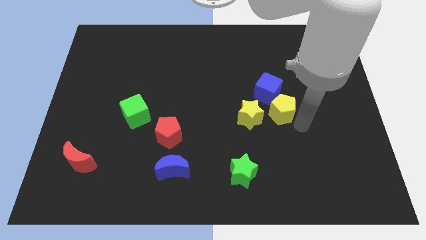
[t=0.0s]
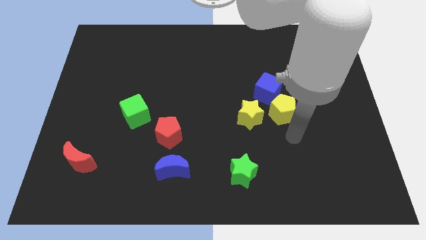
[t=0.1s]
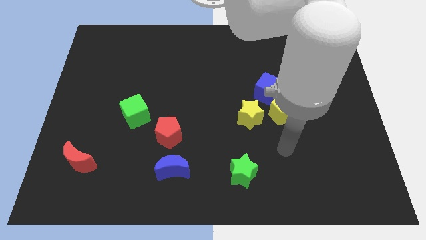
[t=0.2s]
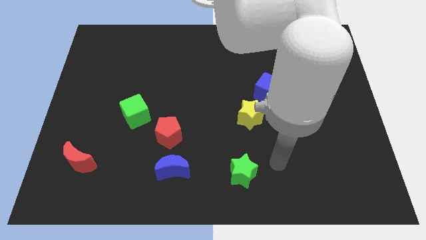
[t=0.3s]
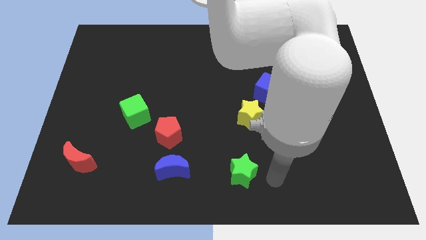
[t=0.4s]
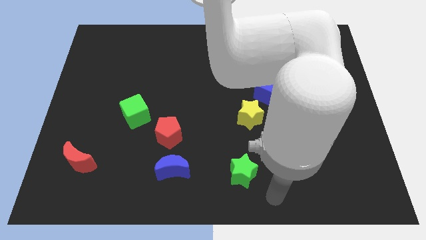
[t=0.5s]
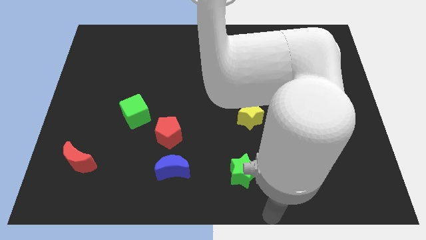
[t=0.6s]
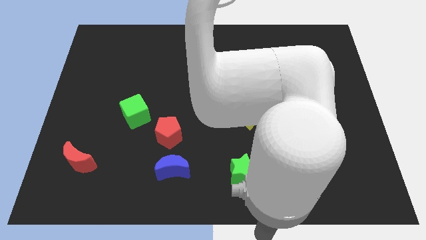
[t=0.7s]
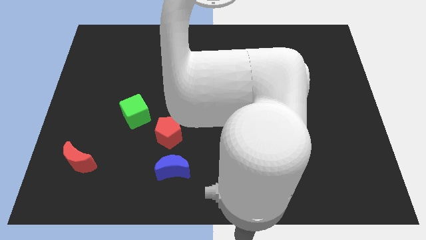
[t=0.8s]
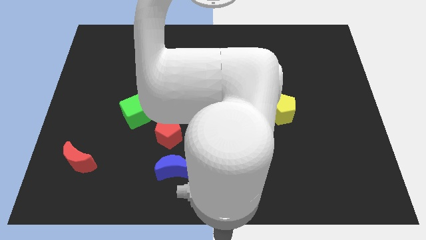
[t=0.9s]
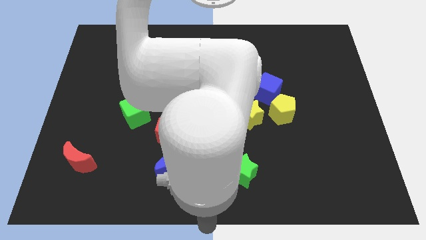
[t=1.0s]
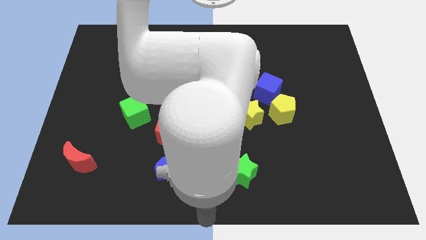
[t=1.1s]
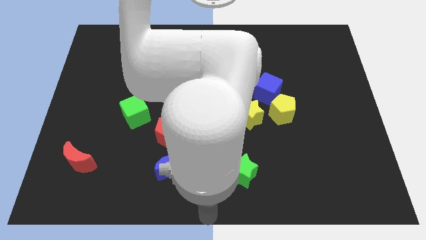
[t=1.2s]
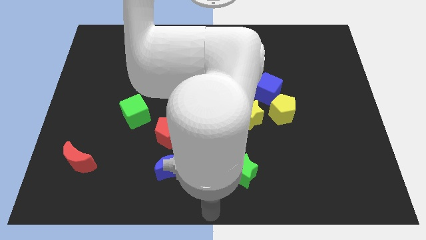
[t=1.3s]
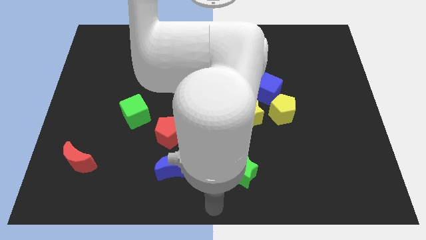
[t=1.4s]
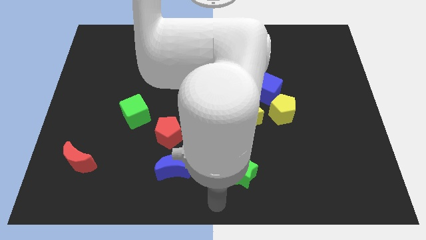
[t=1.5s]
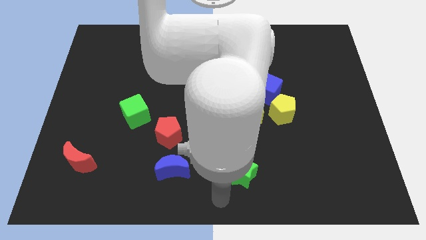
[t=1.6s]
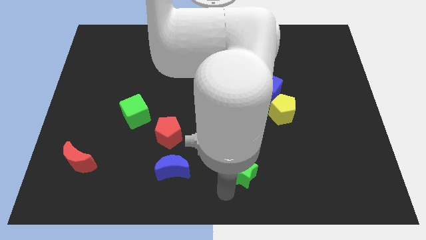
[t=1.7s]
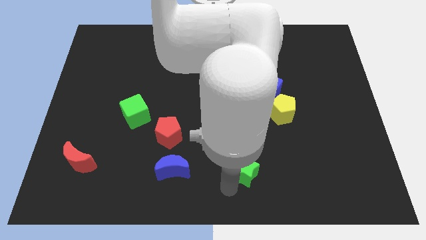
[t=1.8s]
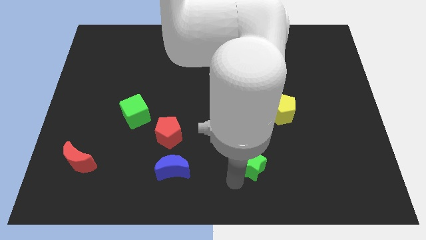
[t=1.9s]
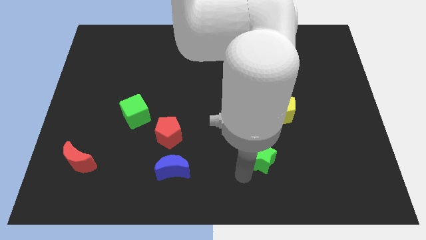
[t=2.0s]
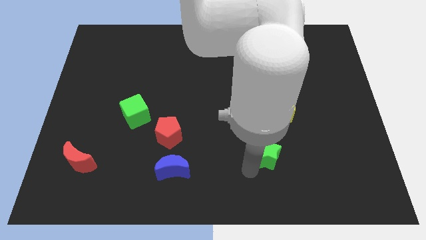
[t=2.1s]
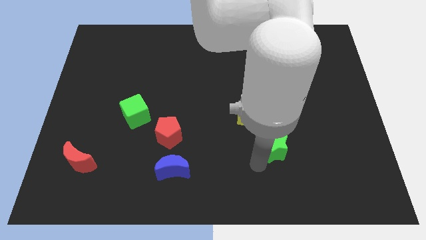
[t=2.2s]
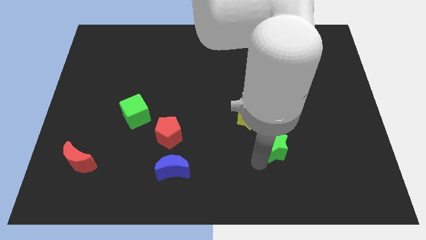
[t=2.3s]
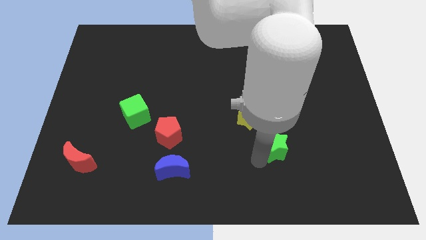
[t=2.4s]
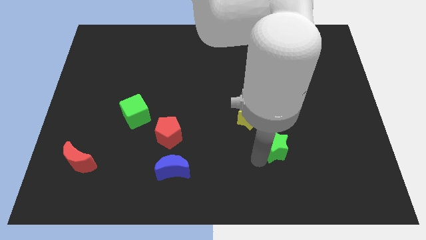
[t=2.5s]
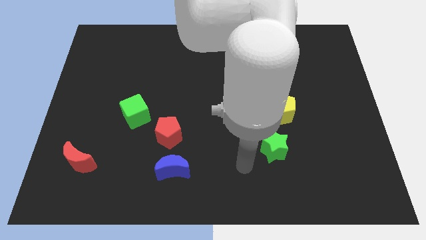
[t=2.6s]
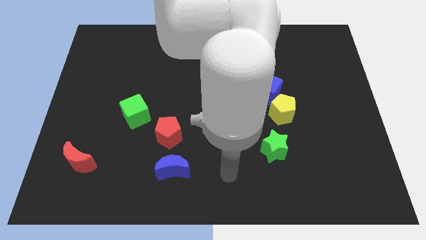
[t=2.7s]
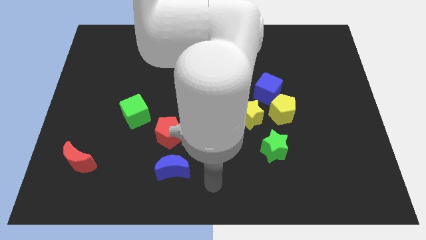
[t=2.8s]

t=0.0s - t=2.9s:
push green star below yellow pentagon

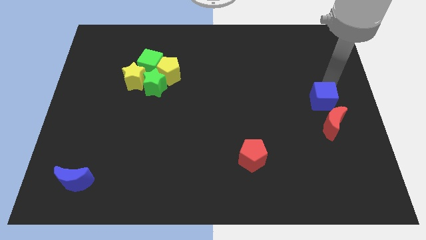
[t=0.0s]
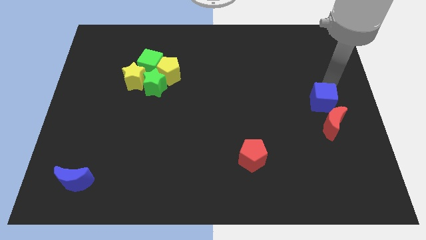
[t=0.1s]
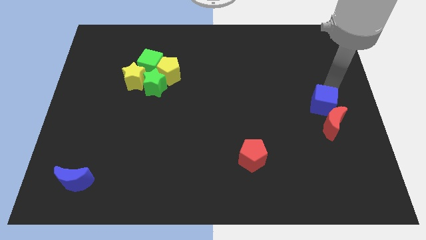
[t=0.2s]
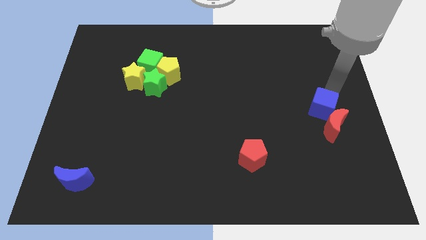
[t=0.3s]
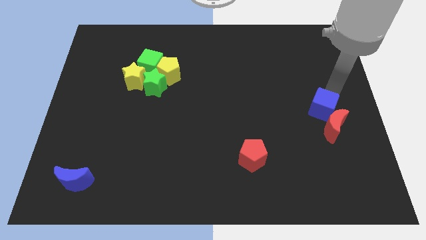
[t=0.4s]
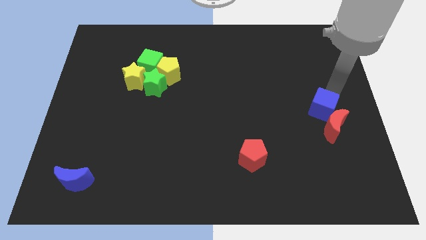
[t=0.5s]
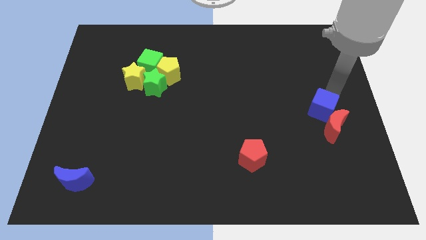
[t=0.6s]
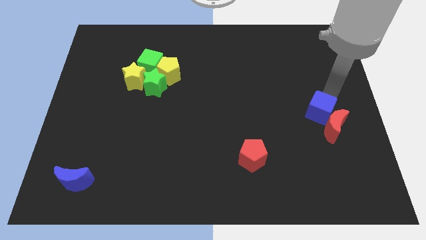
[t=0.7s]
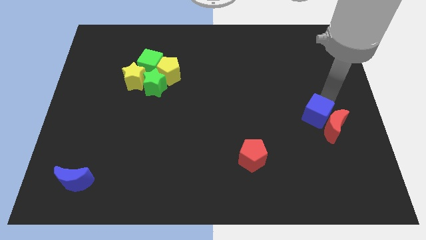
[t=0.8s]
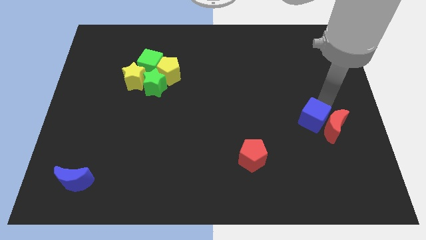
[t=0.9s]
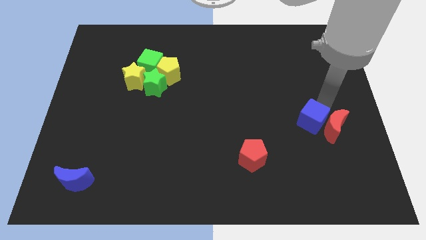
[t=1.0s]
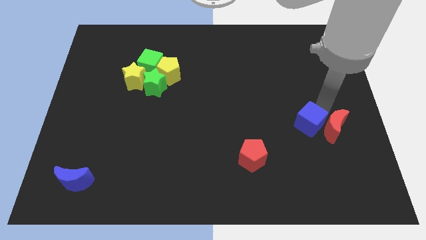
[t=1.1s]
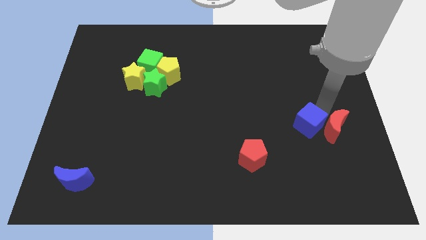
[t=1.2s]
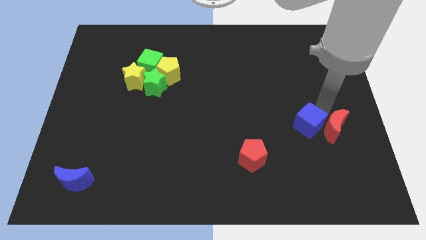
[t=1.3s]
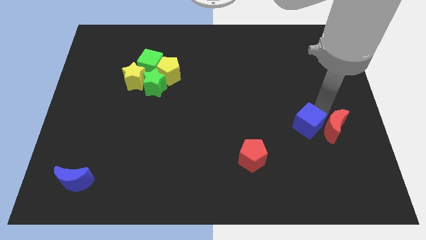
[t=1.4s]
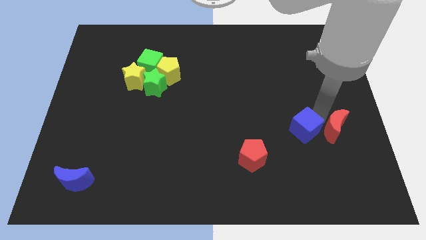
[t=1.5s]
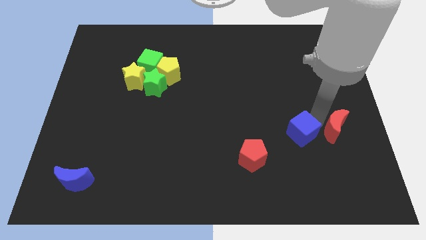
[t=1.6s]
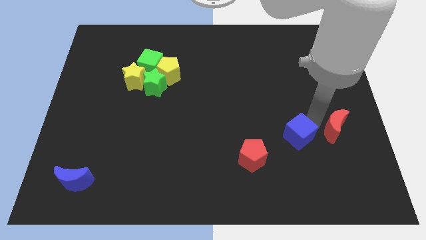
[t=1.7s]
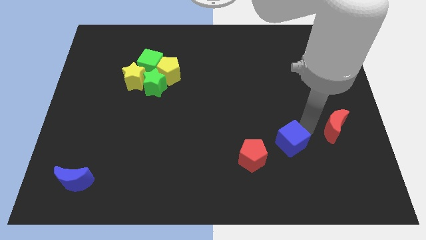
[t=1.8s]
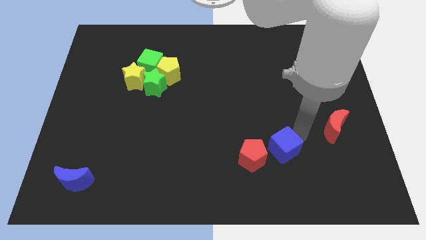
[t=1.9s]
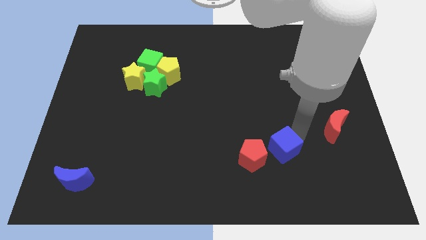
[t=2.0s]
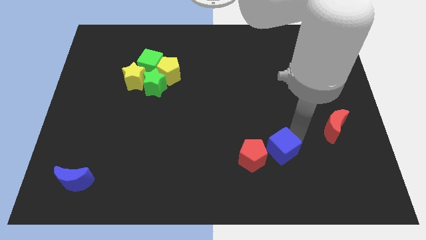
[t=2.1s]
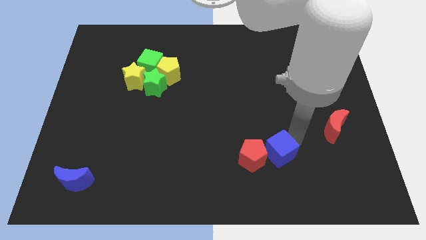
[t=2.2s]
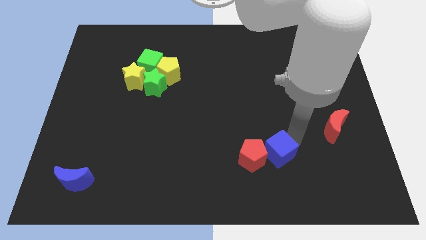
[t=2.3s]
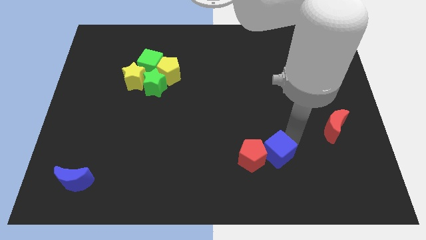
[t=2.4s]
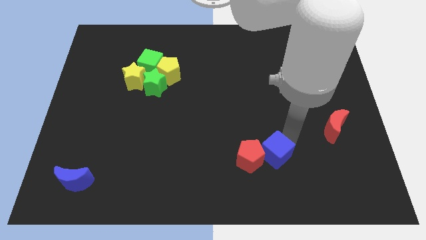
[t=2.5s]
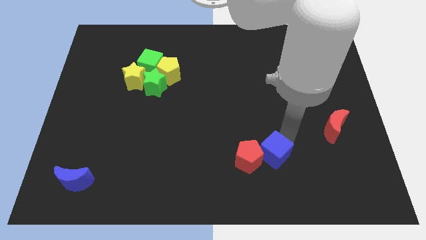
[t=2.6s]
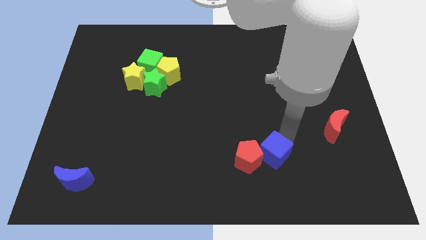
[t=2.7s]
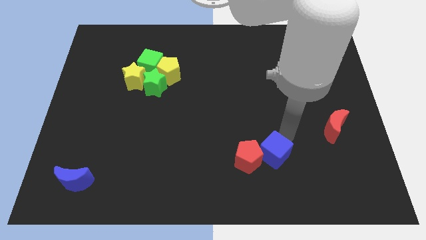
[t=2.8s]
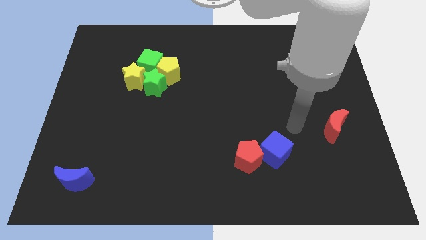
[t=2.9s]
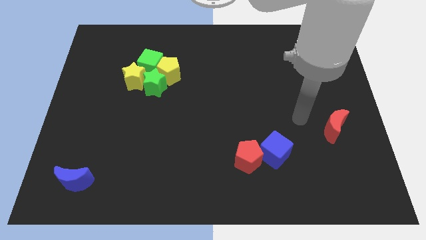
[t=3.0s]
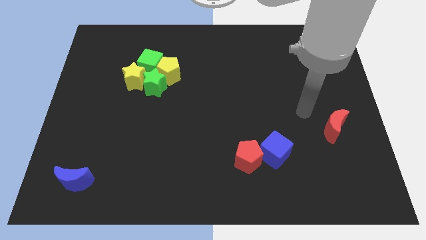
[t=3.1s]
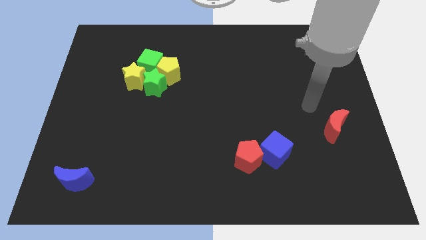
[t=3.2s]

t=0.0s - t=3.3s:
move the blue cube to the top right of the red pentagon

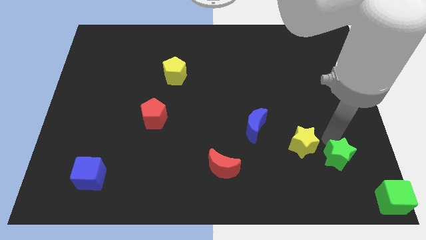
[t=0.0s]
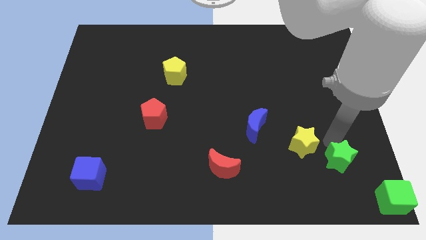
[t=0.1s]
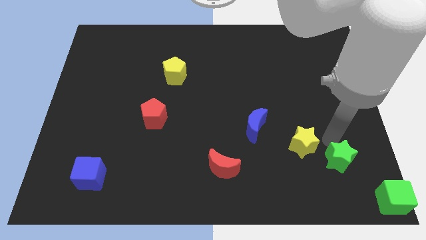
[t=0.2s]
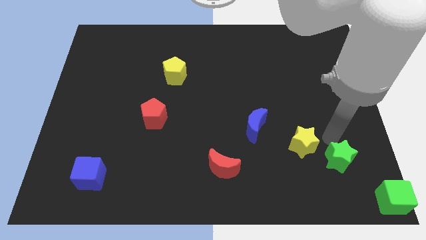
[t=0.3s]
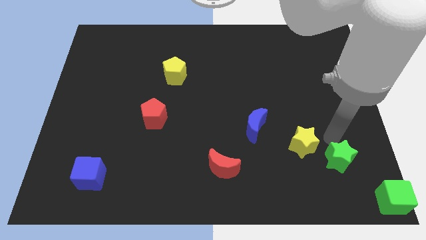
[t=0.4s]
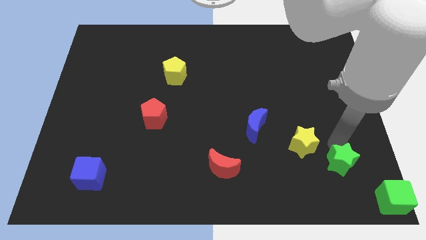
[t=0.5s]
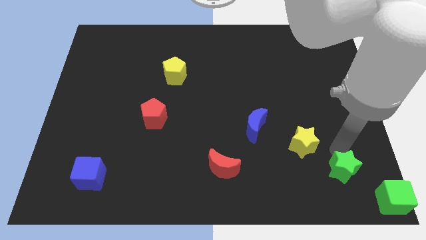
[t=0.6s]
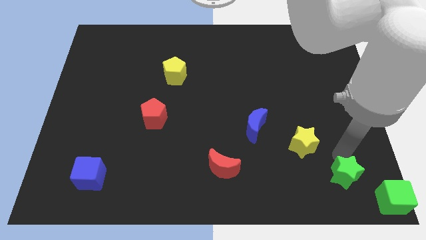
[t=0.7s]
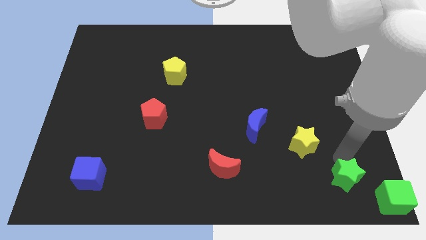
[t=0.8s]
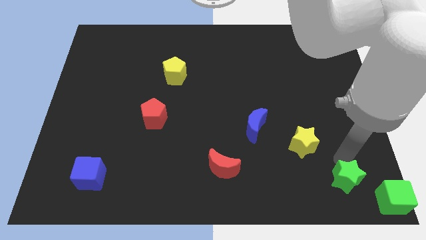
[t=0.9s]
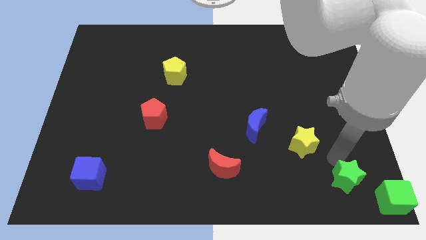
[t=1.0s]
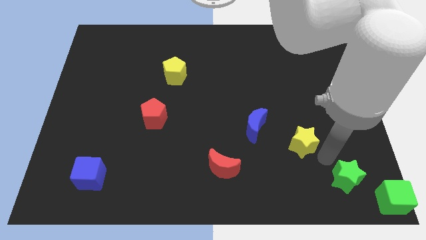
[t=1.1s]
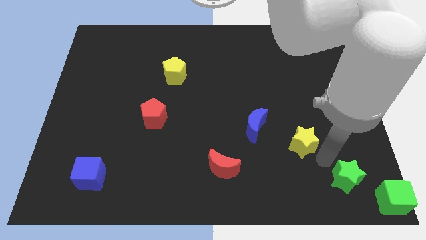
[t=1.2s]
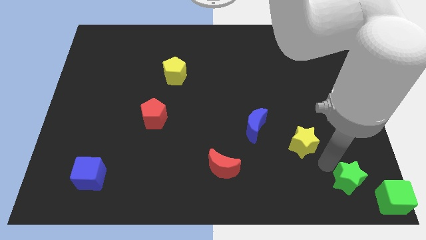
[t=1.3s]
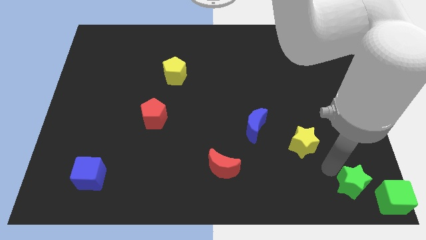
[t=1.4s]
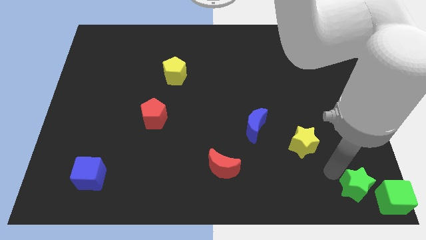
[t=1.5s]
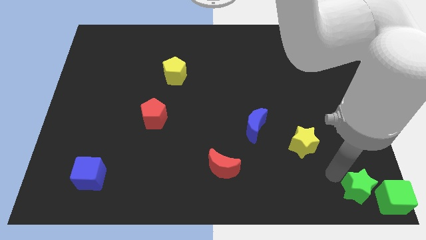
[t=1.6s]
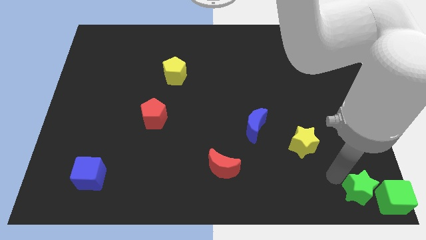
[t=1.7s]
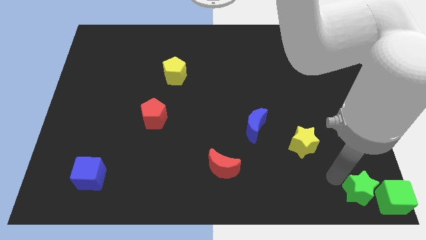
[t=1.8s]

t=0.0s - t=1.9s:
push the green star towards the green cube

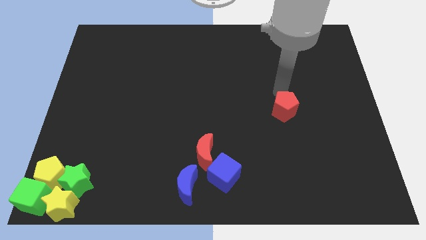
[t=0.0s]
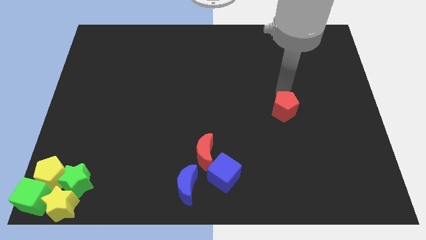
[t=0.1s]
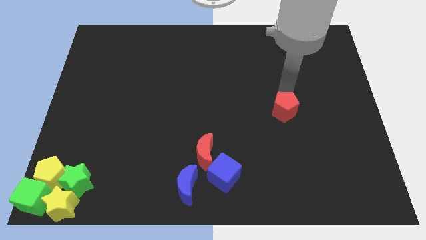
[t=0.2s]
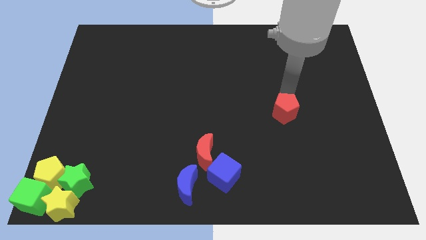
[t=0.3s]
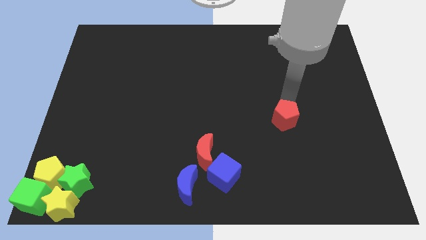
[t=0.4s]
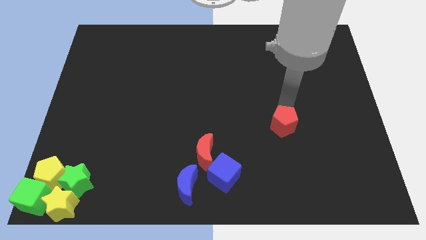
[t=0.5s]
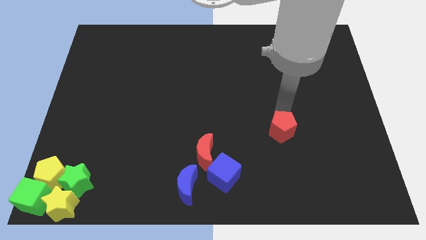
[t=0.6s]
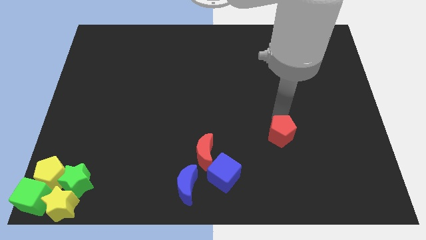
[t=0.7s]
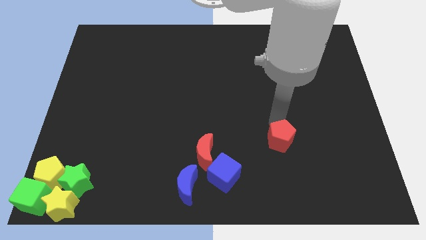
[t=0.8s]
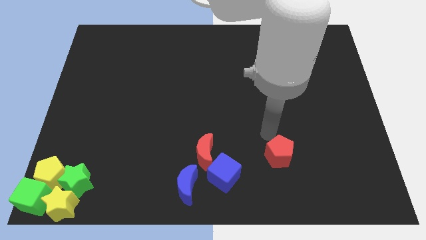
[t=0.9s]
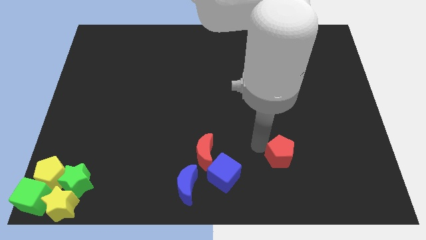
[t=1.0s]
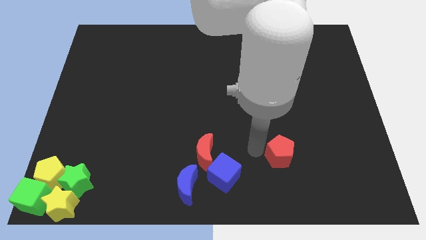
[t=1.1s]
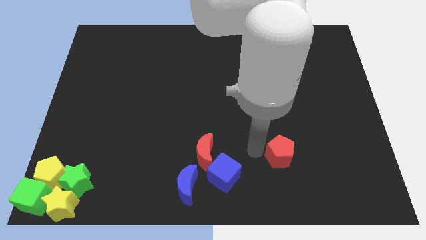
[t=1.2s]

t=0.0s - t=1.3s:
move the red pentagon parallel right to red moon
